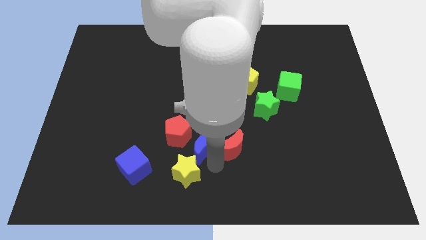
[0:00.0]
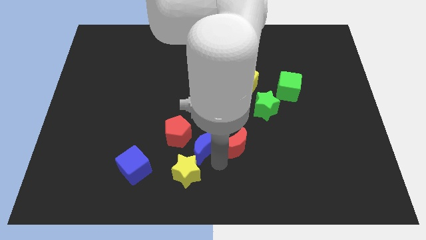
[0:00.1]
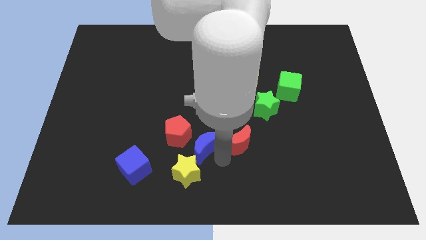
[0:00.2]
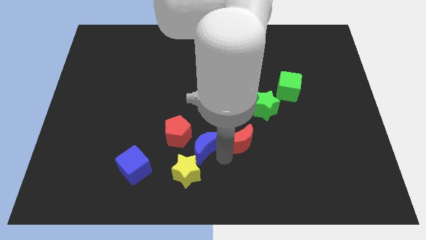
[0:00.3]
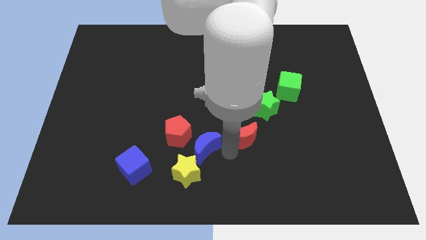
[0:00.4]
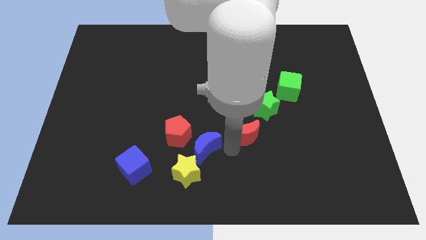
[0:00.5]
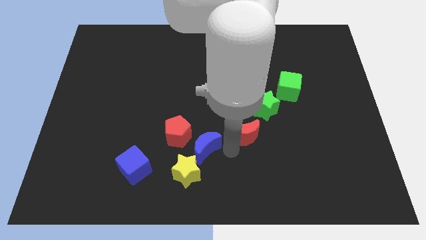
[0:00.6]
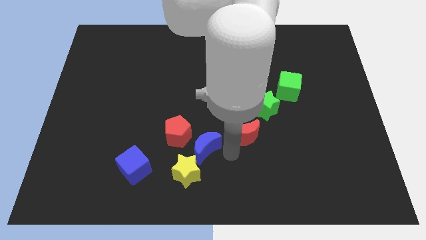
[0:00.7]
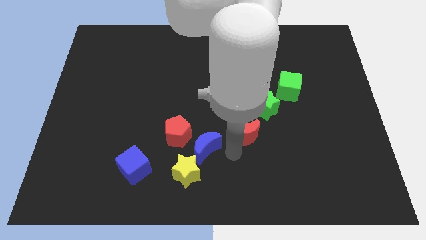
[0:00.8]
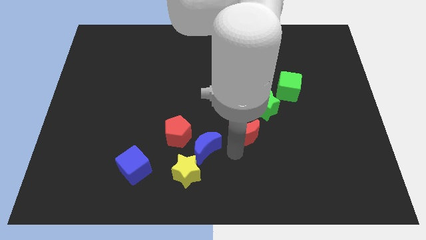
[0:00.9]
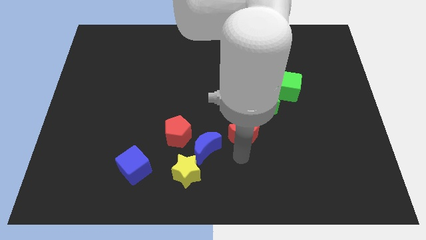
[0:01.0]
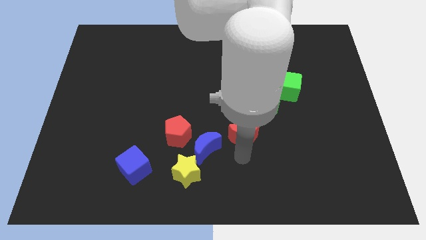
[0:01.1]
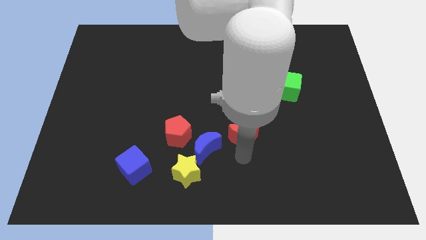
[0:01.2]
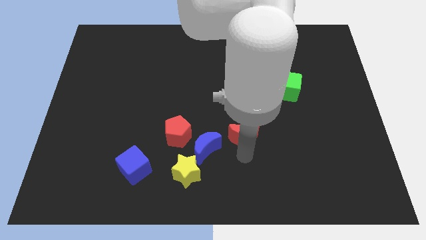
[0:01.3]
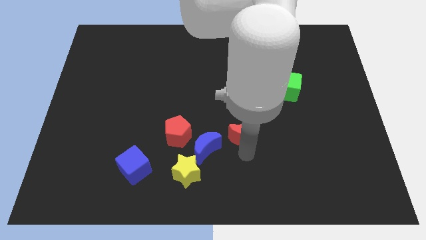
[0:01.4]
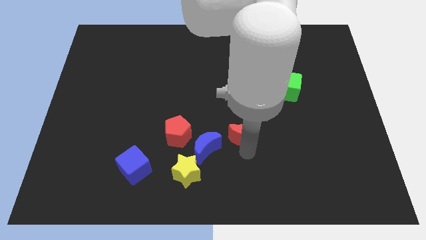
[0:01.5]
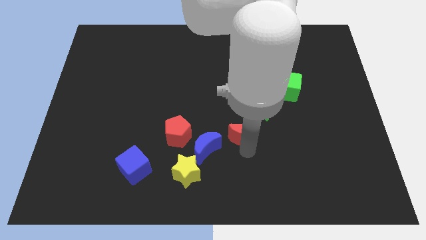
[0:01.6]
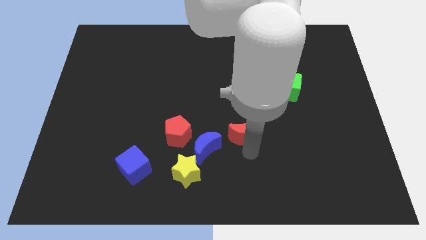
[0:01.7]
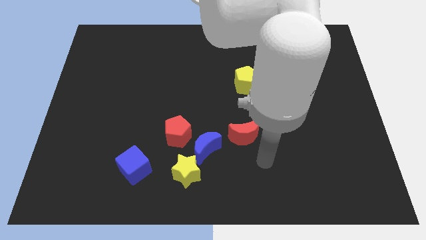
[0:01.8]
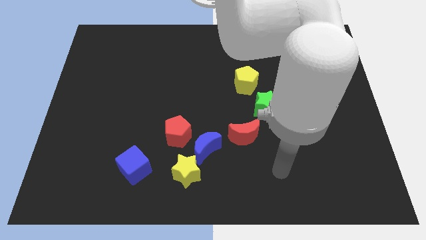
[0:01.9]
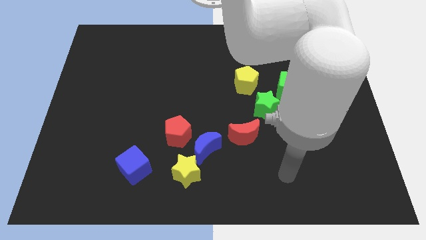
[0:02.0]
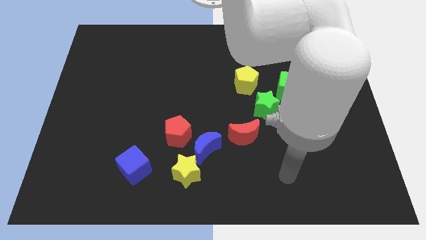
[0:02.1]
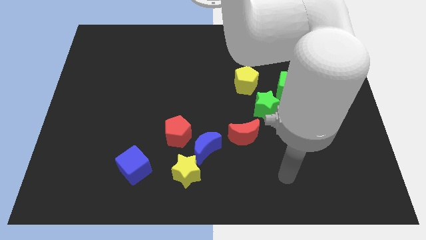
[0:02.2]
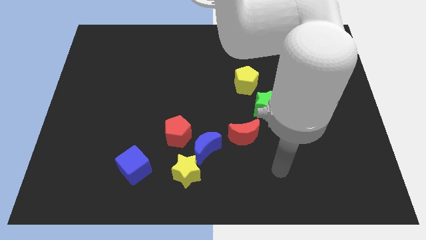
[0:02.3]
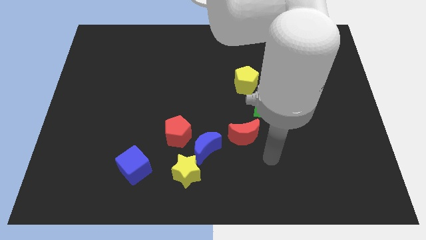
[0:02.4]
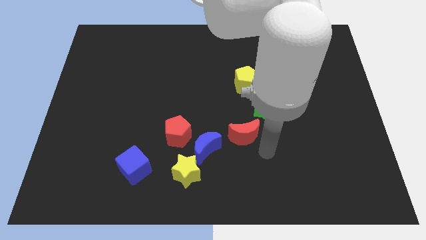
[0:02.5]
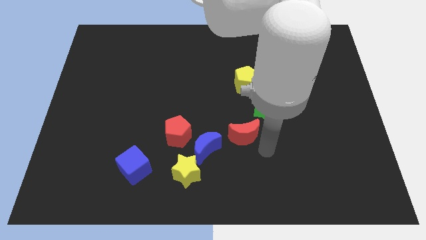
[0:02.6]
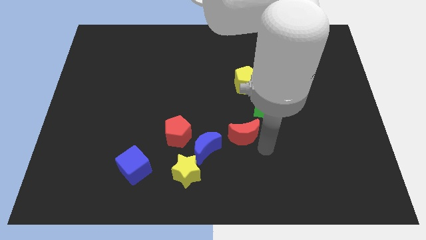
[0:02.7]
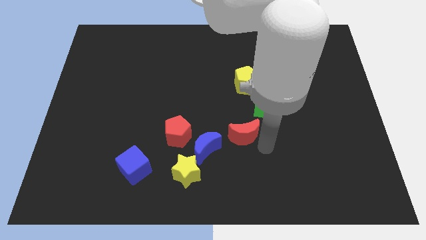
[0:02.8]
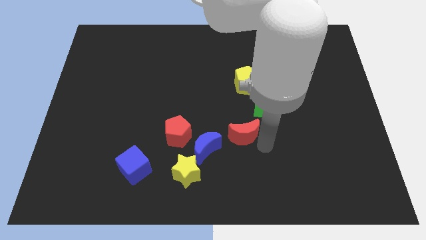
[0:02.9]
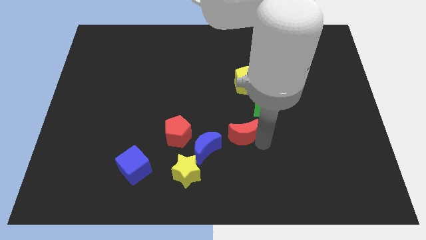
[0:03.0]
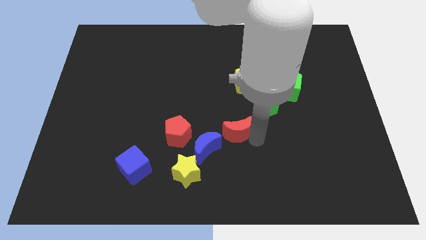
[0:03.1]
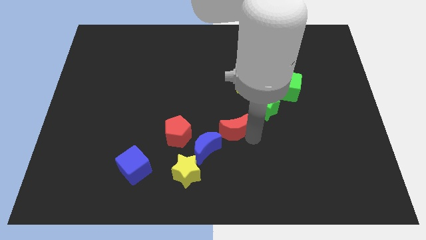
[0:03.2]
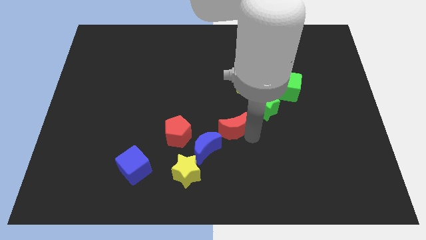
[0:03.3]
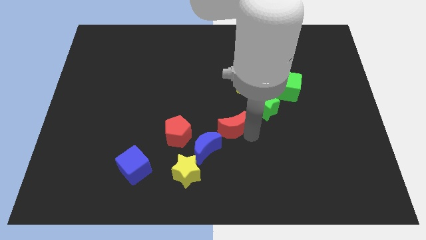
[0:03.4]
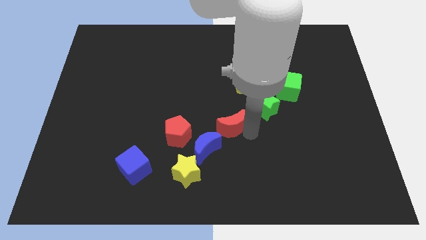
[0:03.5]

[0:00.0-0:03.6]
place the red moon in between the blue moon and green star

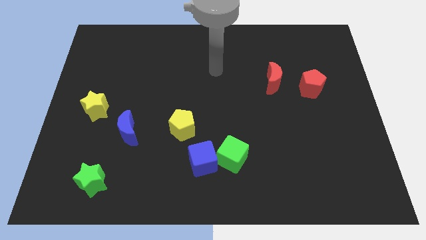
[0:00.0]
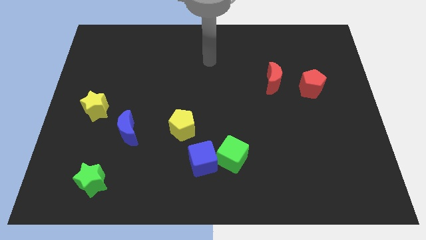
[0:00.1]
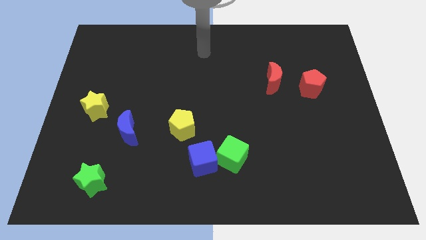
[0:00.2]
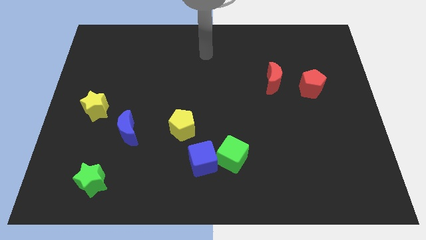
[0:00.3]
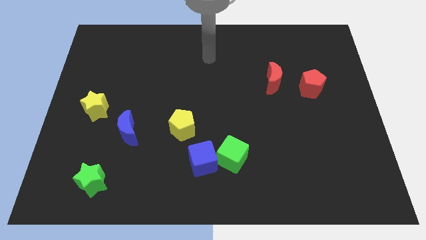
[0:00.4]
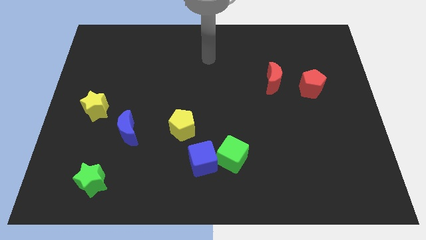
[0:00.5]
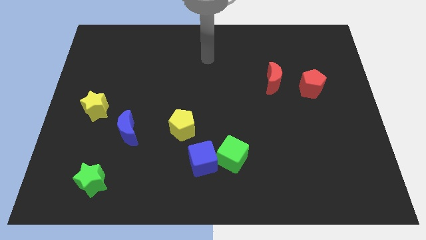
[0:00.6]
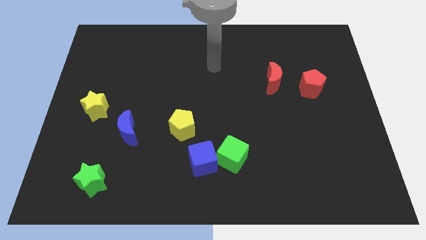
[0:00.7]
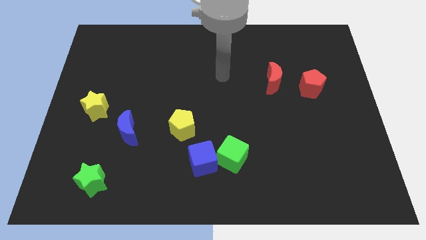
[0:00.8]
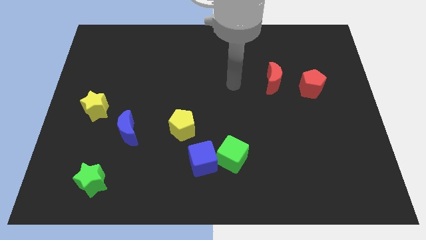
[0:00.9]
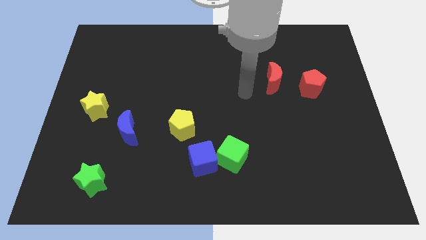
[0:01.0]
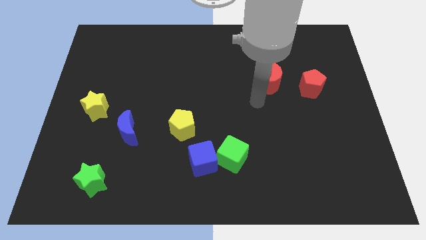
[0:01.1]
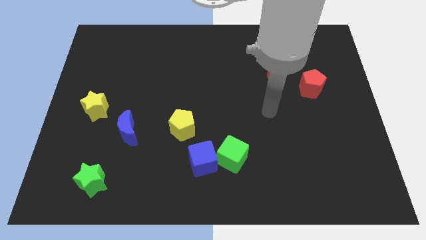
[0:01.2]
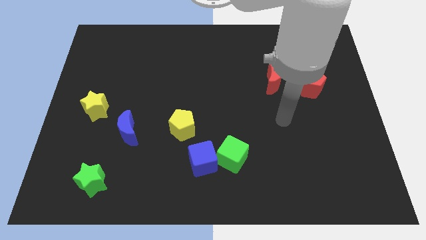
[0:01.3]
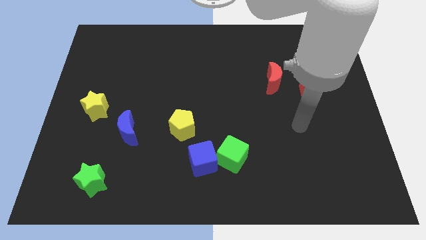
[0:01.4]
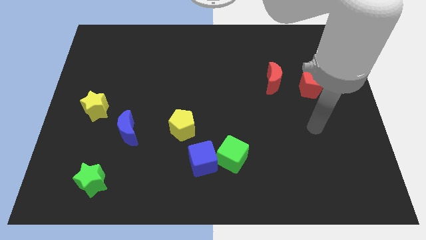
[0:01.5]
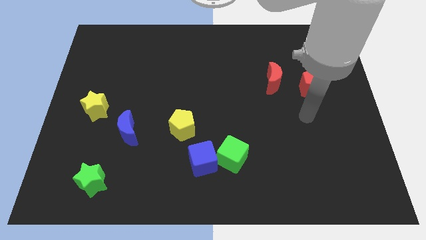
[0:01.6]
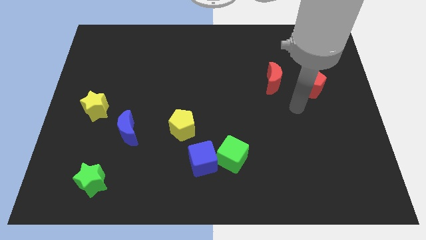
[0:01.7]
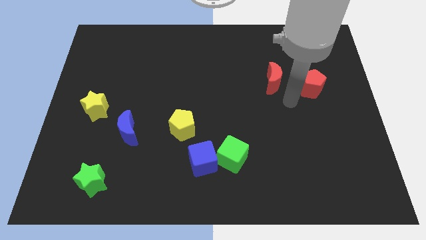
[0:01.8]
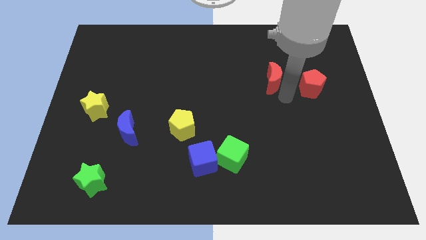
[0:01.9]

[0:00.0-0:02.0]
point your arm at the bottom right side of red moon

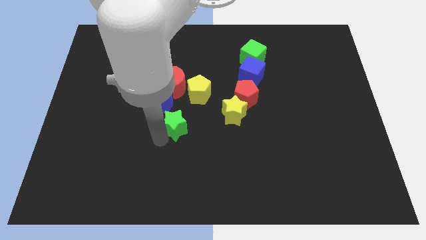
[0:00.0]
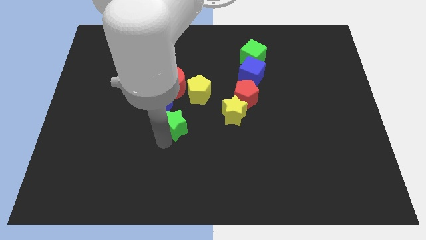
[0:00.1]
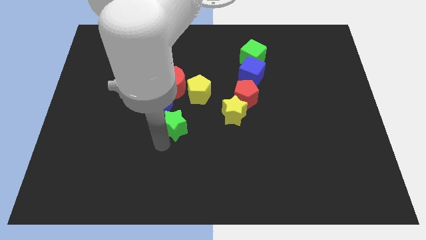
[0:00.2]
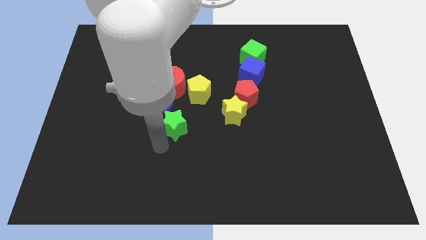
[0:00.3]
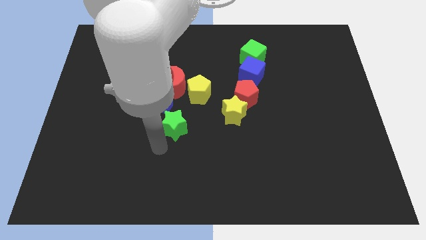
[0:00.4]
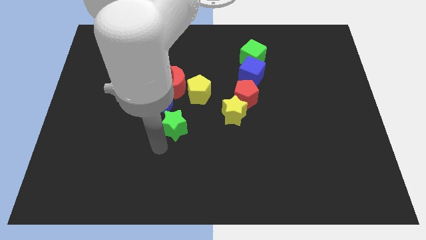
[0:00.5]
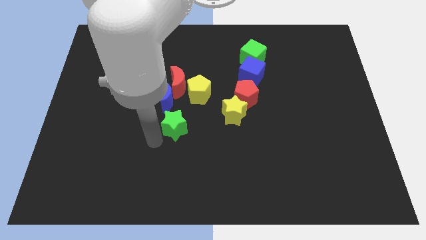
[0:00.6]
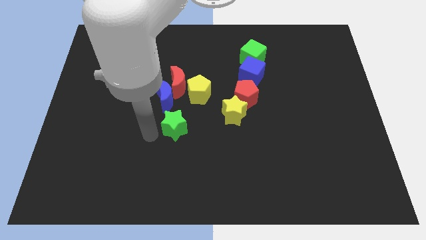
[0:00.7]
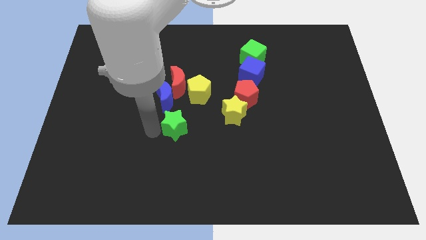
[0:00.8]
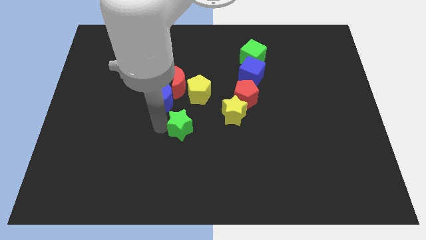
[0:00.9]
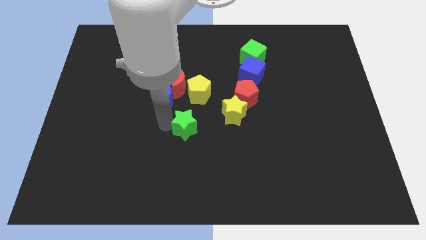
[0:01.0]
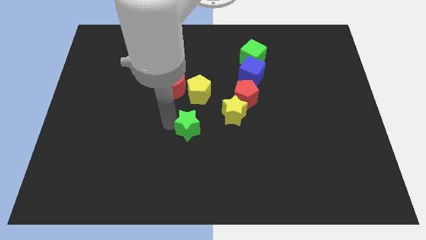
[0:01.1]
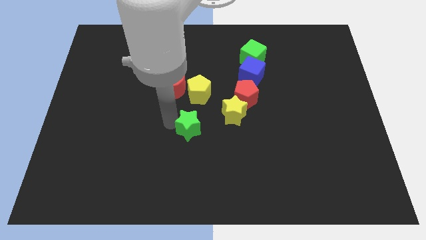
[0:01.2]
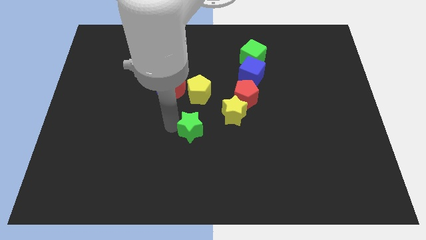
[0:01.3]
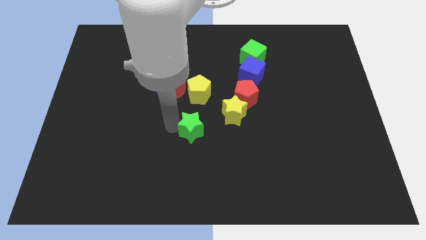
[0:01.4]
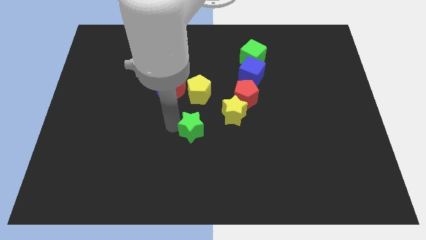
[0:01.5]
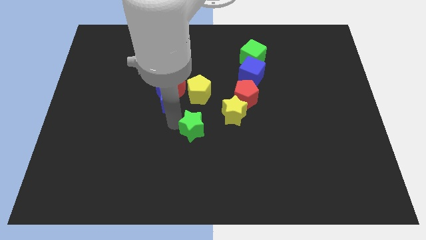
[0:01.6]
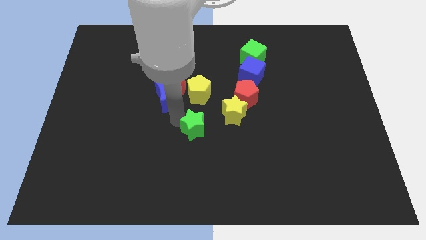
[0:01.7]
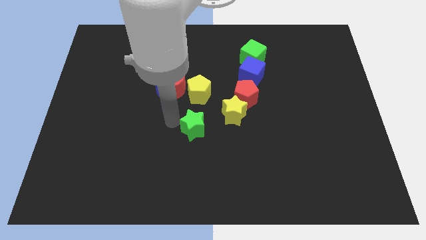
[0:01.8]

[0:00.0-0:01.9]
push the green star vertically below the yellow pentagon

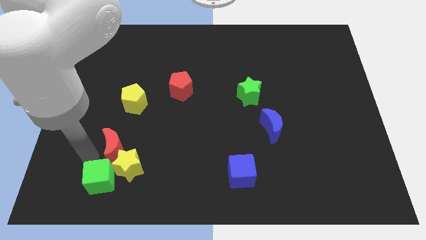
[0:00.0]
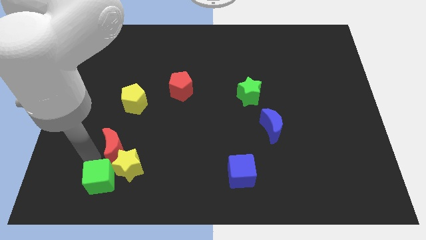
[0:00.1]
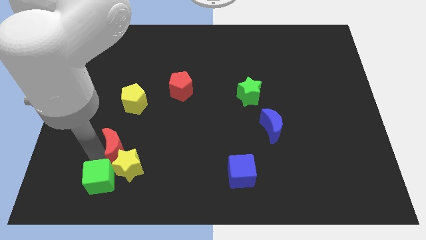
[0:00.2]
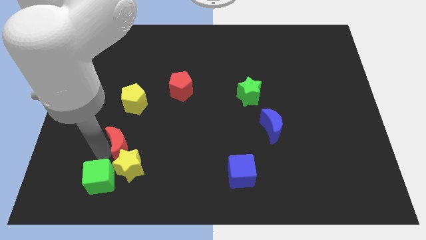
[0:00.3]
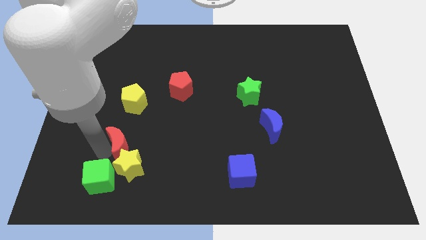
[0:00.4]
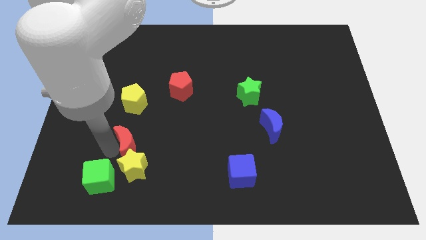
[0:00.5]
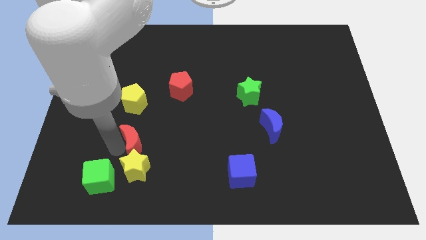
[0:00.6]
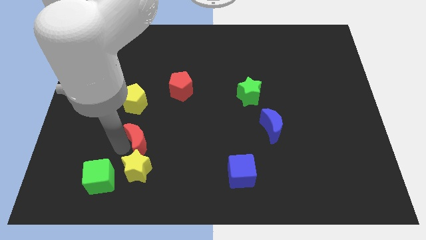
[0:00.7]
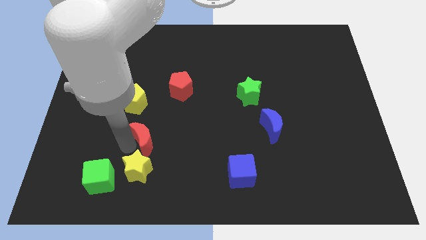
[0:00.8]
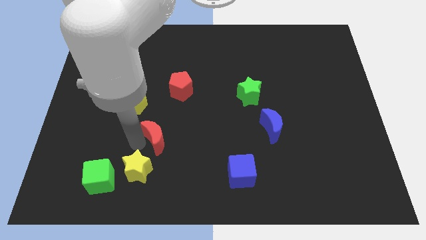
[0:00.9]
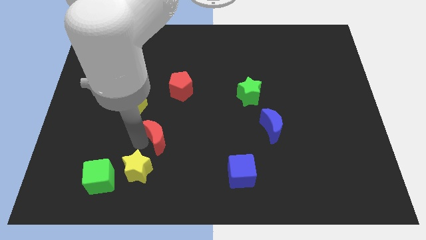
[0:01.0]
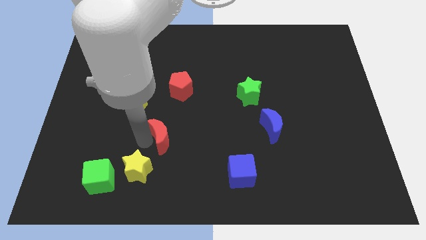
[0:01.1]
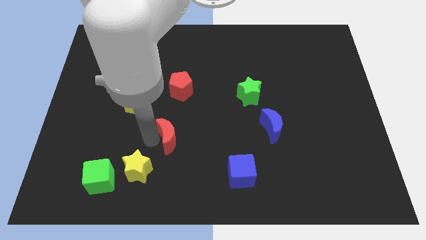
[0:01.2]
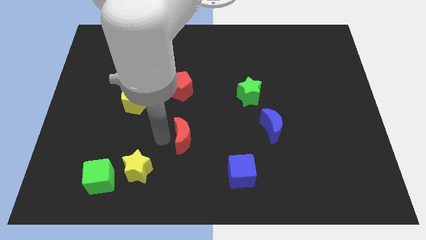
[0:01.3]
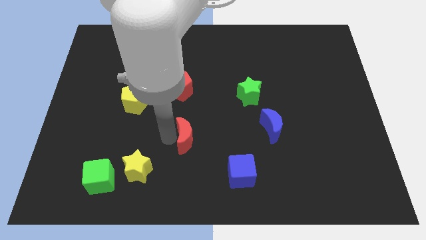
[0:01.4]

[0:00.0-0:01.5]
place the red crescent below the red pentagon
